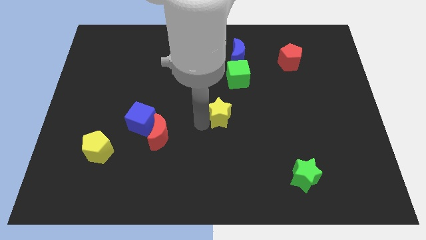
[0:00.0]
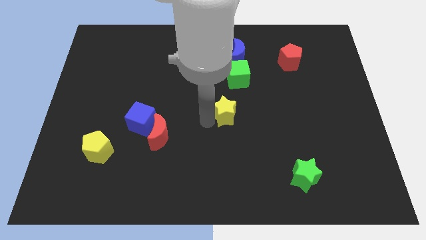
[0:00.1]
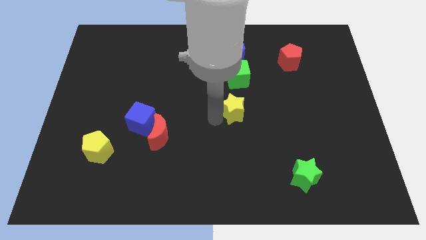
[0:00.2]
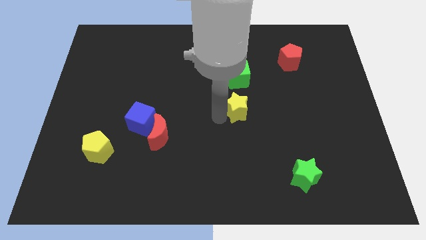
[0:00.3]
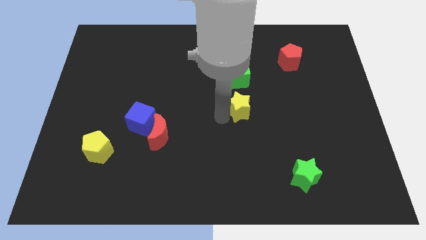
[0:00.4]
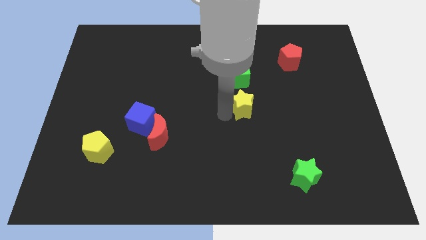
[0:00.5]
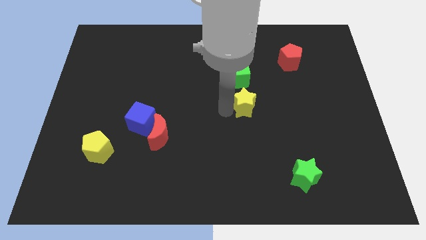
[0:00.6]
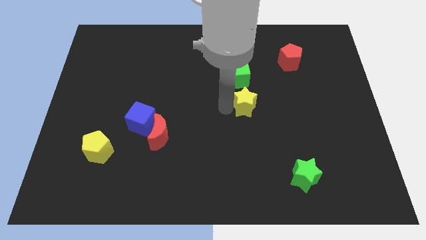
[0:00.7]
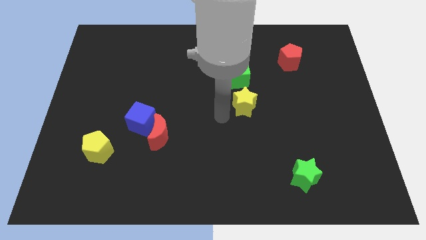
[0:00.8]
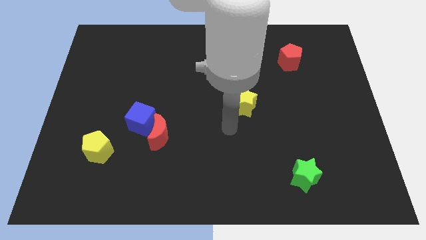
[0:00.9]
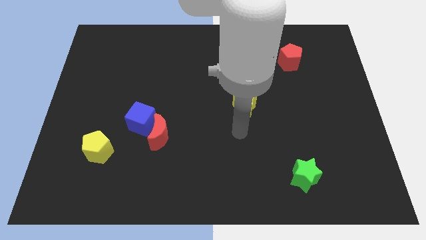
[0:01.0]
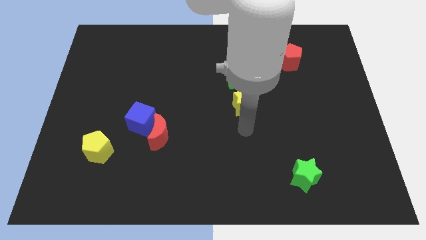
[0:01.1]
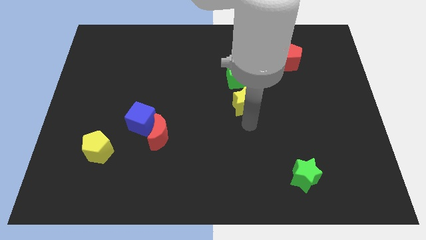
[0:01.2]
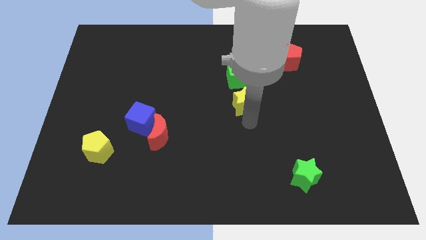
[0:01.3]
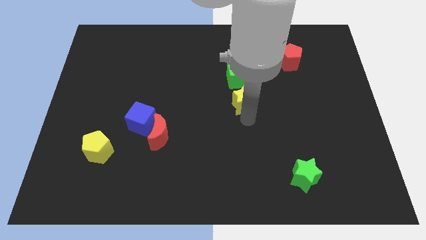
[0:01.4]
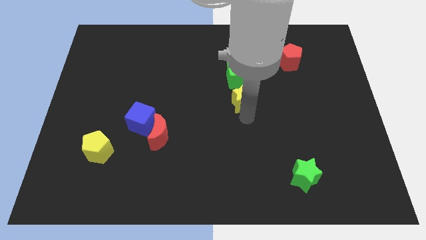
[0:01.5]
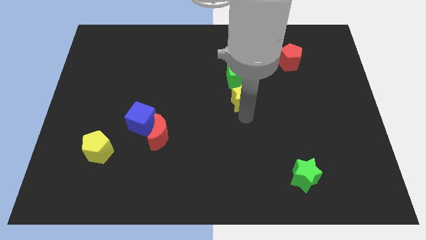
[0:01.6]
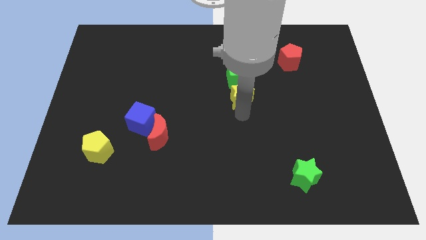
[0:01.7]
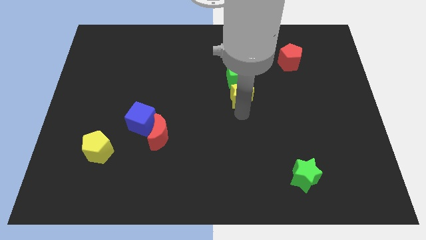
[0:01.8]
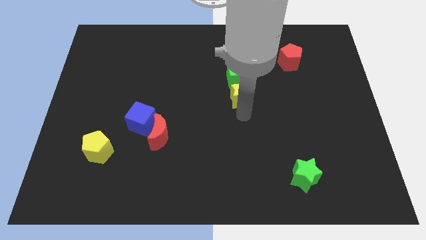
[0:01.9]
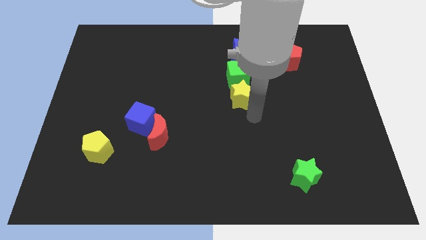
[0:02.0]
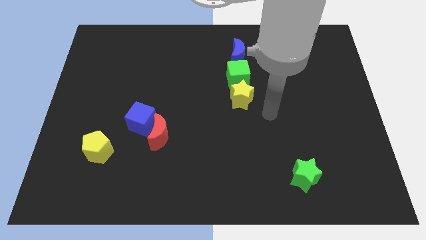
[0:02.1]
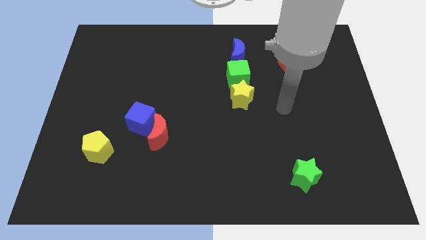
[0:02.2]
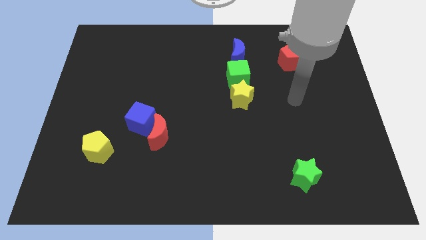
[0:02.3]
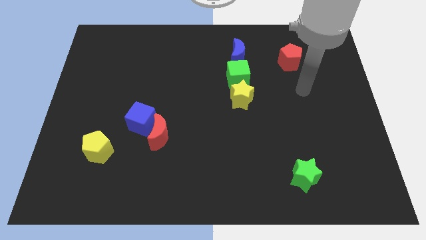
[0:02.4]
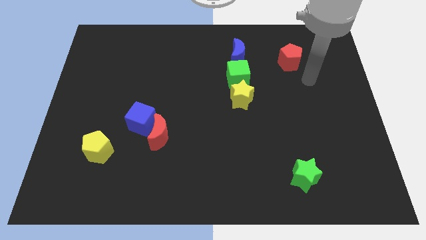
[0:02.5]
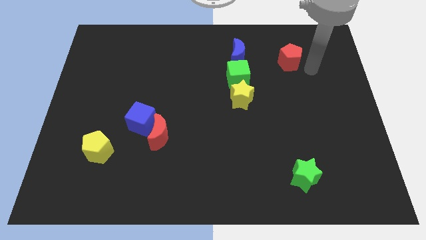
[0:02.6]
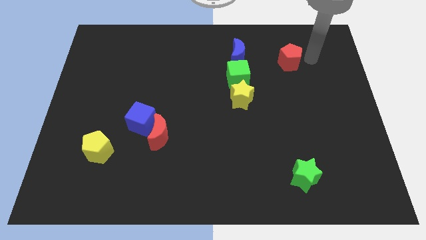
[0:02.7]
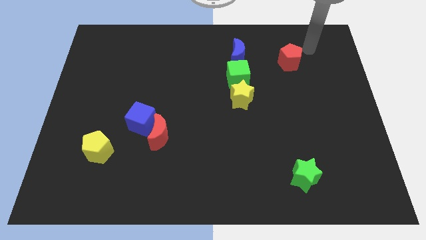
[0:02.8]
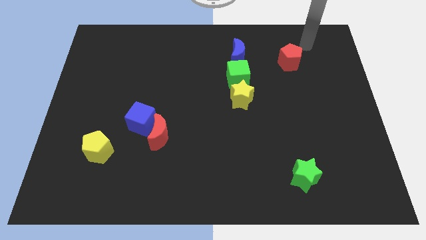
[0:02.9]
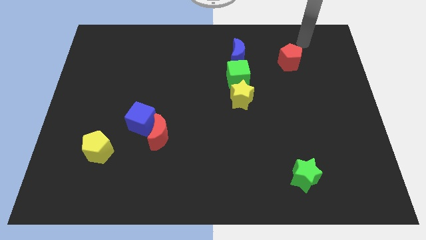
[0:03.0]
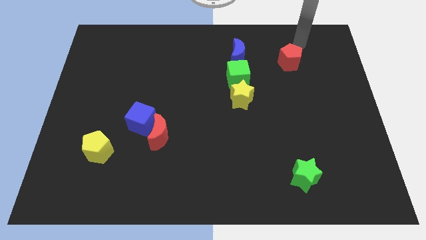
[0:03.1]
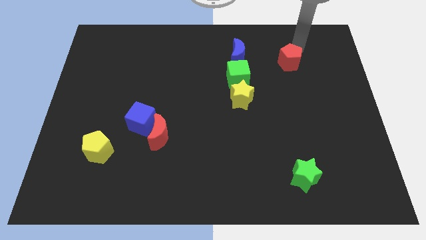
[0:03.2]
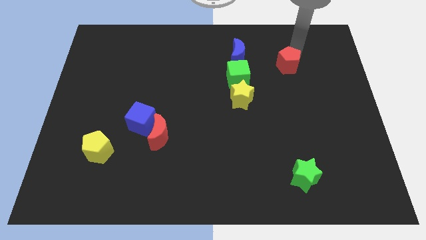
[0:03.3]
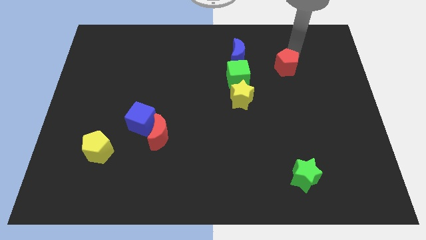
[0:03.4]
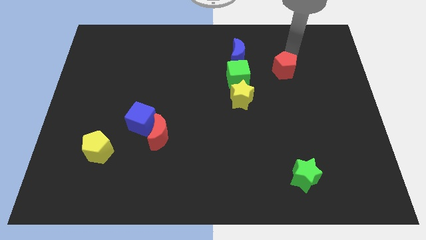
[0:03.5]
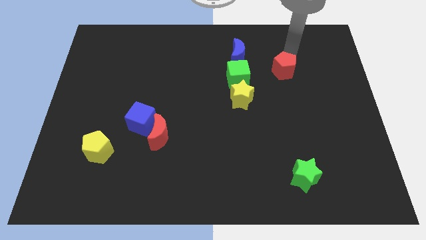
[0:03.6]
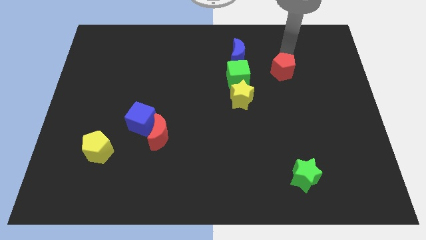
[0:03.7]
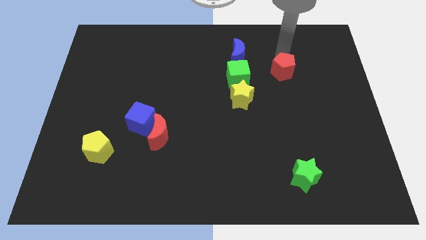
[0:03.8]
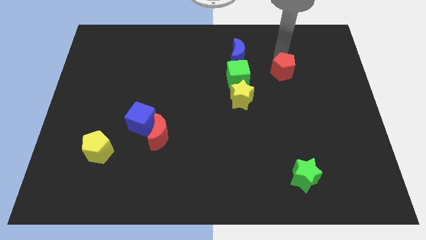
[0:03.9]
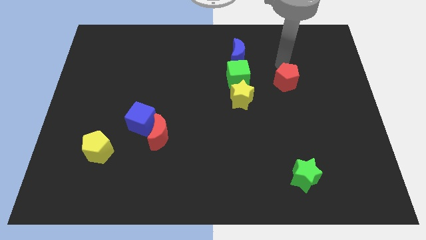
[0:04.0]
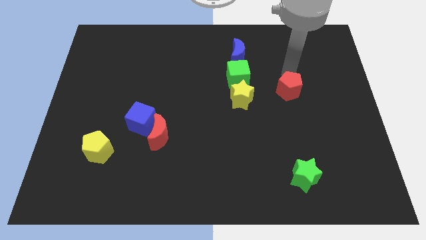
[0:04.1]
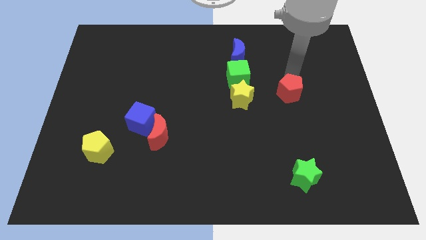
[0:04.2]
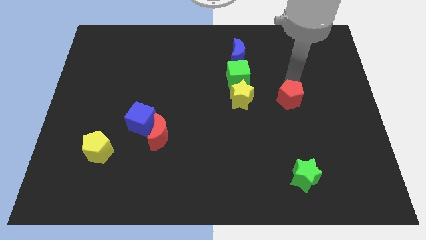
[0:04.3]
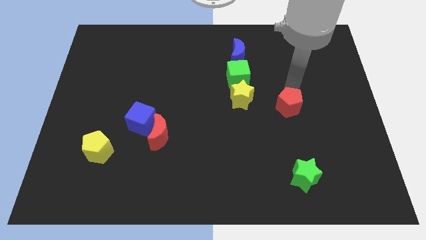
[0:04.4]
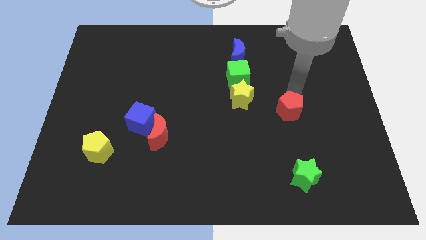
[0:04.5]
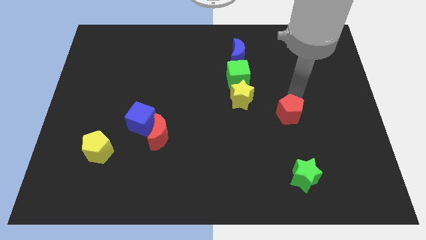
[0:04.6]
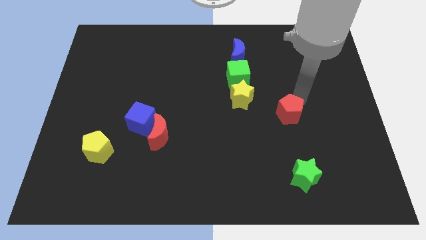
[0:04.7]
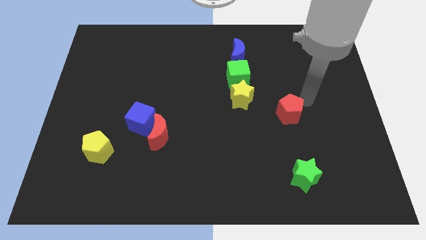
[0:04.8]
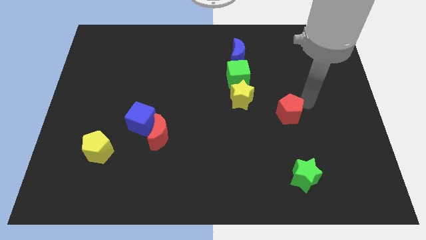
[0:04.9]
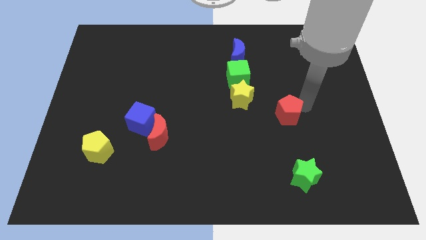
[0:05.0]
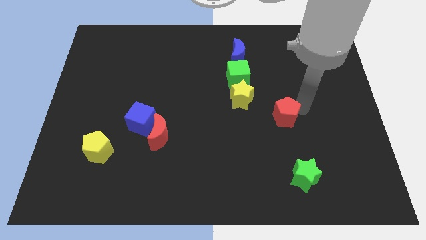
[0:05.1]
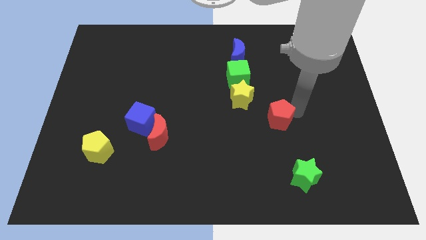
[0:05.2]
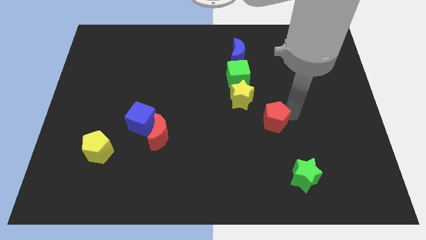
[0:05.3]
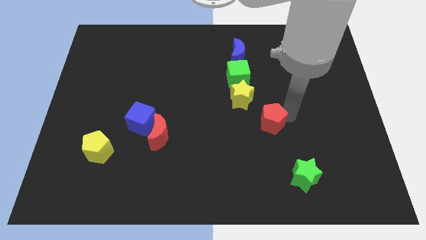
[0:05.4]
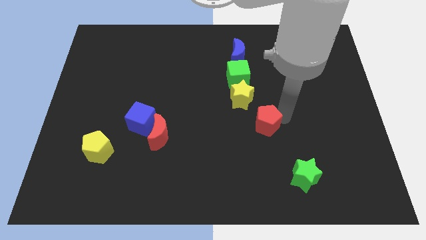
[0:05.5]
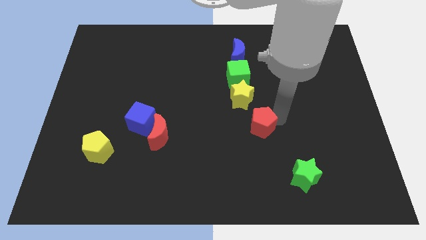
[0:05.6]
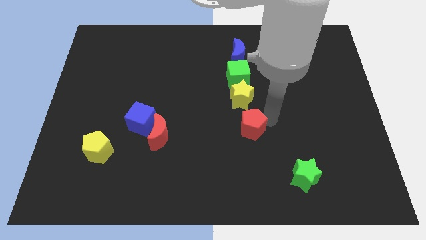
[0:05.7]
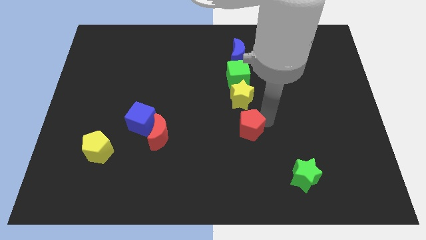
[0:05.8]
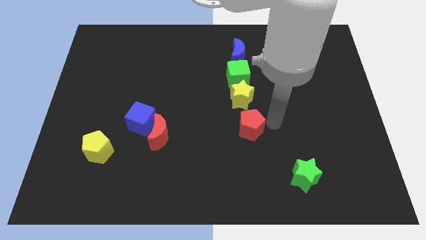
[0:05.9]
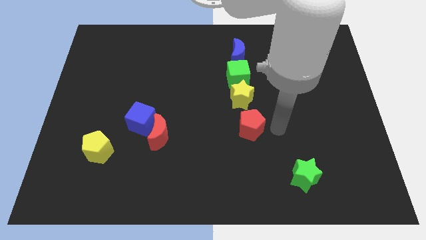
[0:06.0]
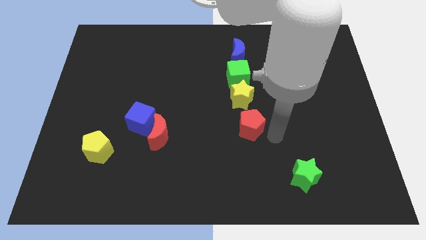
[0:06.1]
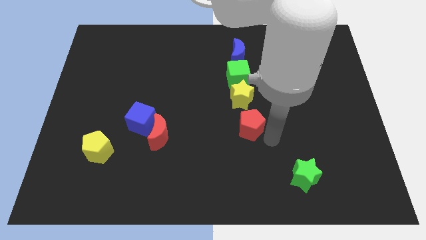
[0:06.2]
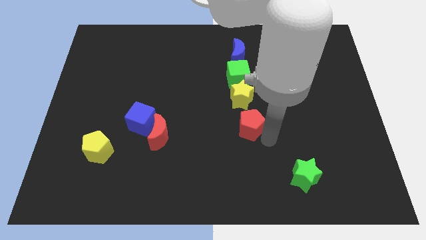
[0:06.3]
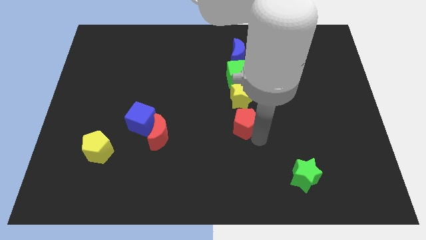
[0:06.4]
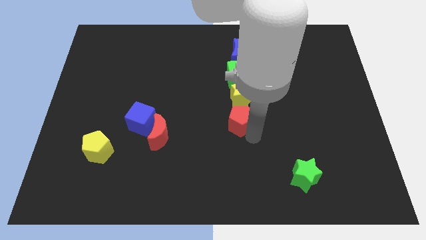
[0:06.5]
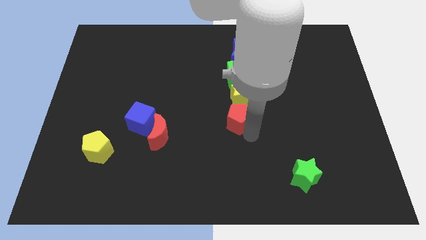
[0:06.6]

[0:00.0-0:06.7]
place the yellow star and red pentagon together to form a vertical line

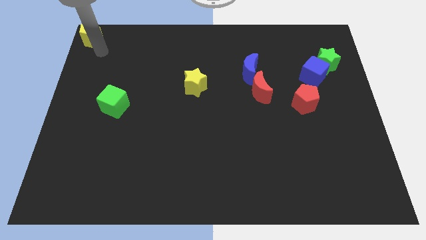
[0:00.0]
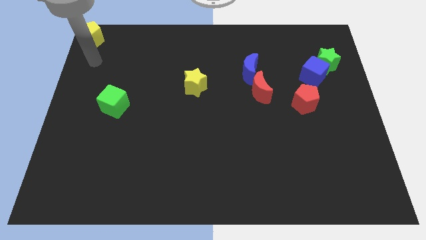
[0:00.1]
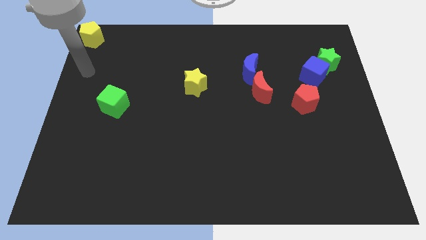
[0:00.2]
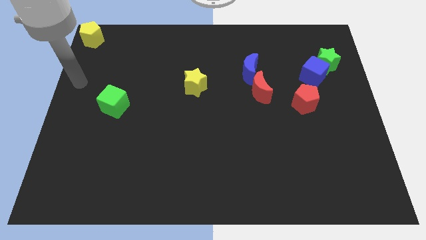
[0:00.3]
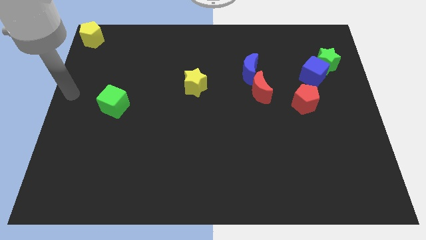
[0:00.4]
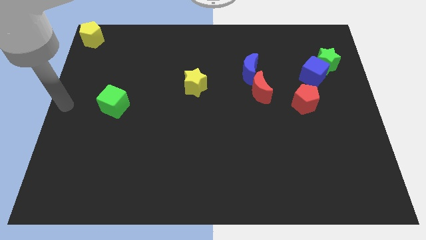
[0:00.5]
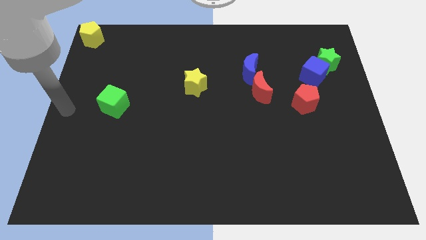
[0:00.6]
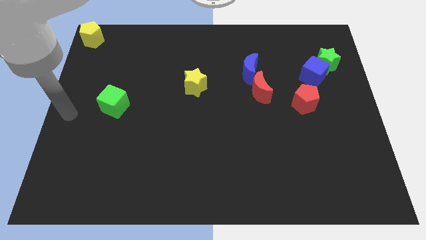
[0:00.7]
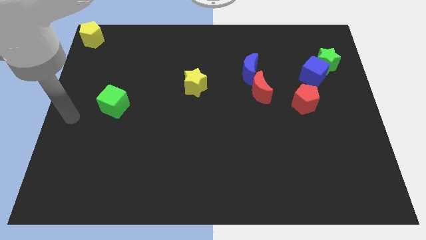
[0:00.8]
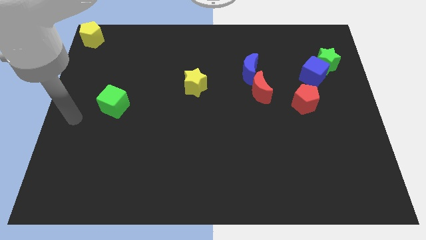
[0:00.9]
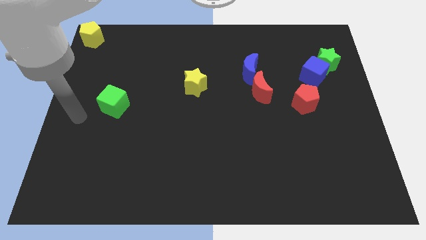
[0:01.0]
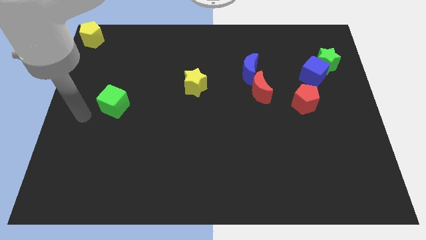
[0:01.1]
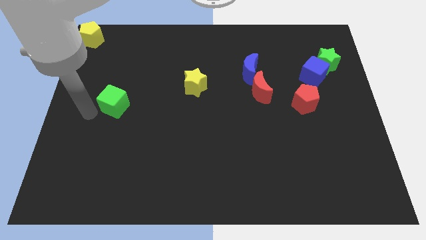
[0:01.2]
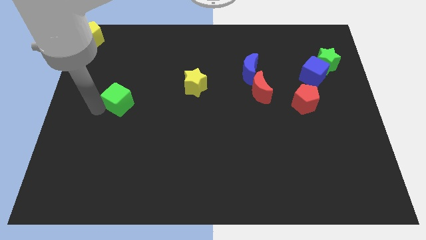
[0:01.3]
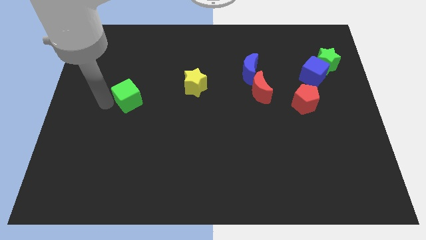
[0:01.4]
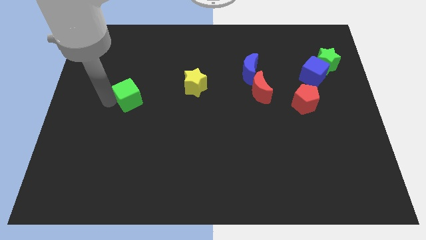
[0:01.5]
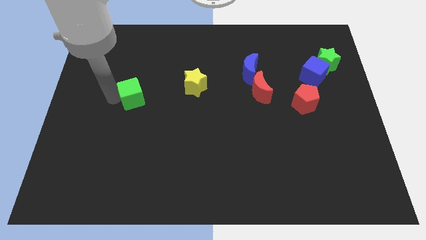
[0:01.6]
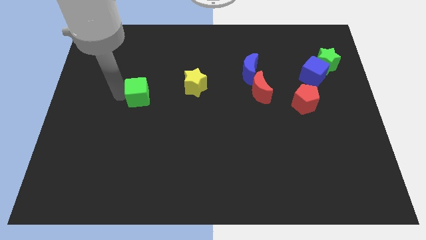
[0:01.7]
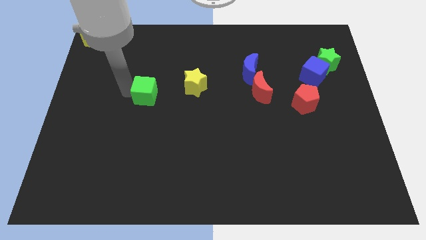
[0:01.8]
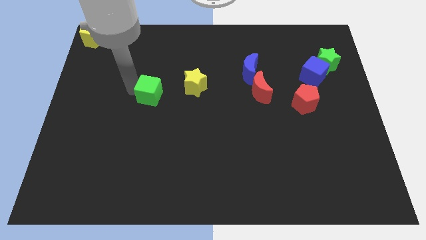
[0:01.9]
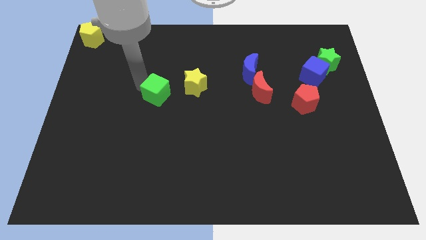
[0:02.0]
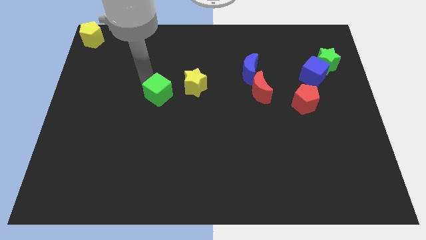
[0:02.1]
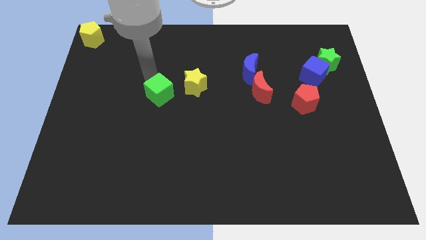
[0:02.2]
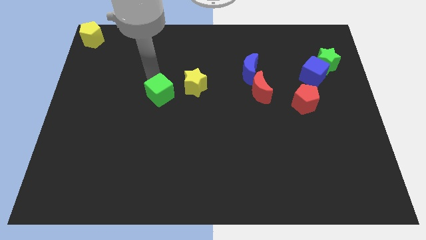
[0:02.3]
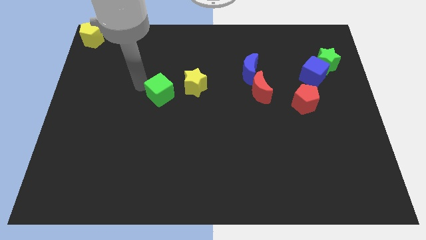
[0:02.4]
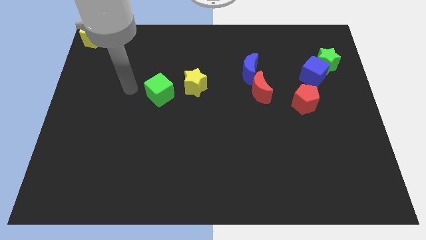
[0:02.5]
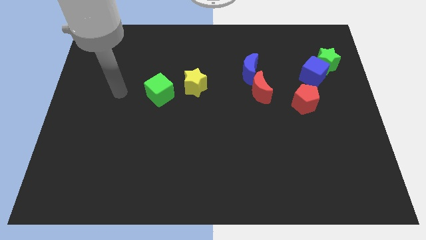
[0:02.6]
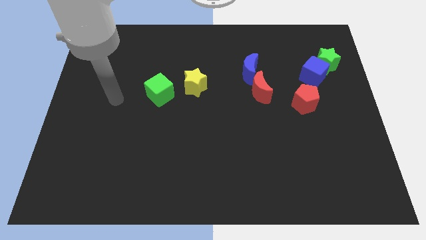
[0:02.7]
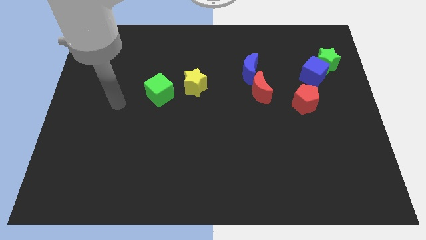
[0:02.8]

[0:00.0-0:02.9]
place the green cube to the left of the yellow star
